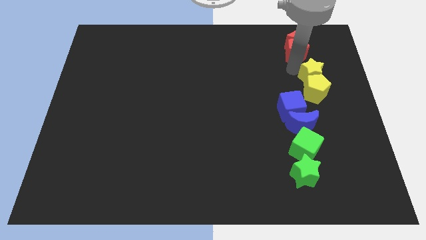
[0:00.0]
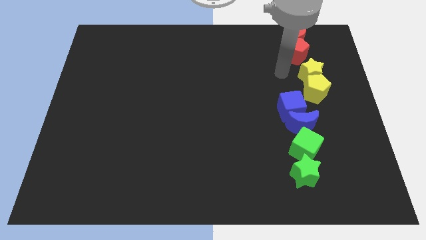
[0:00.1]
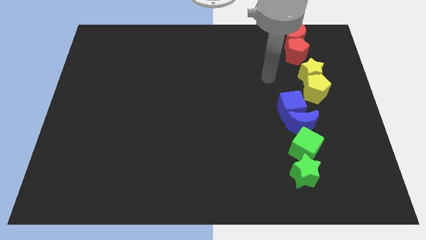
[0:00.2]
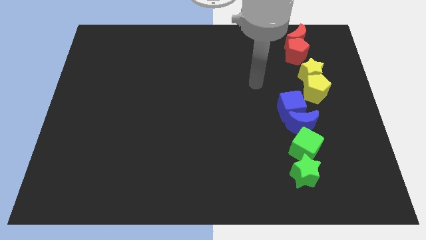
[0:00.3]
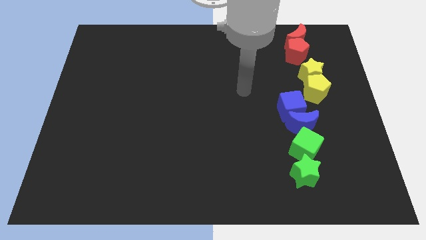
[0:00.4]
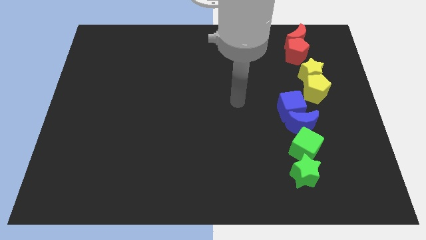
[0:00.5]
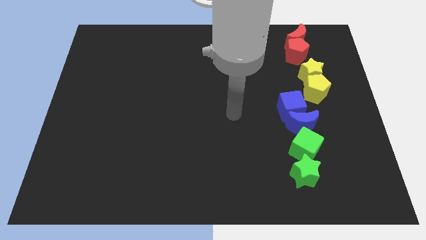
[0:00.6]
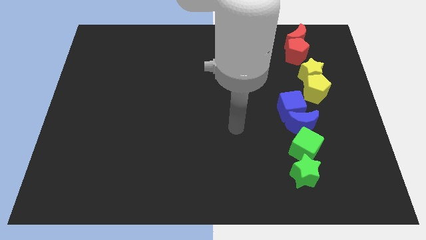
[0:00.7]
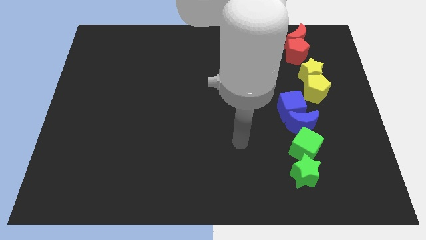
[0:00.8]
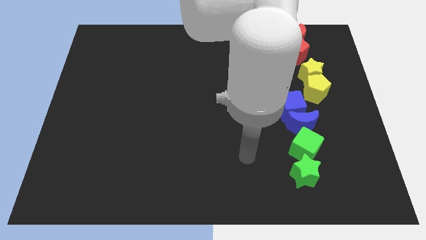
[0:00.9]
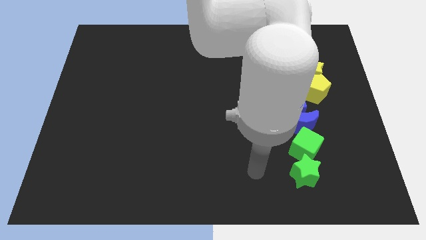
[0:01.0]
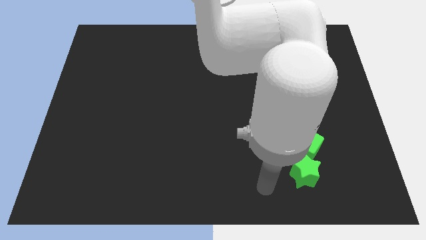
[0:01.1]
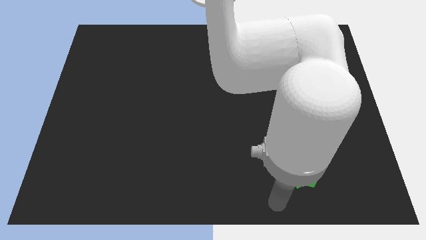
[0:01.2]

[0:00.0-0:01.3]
go away from the yellow star

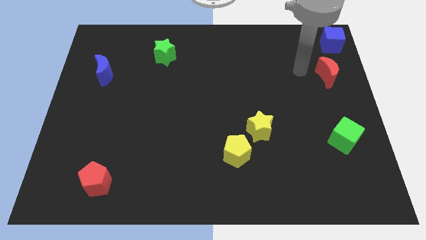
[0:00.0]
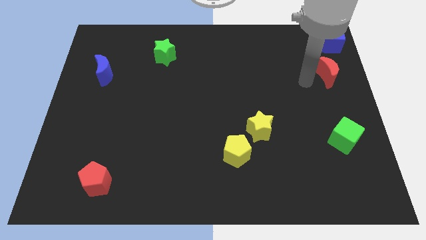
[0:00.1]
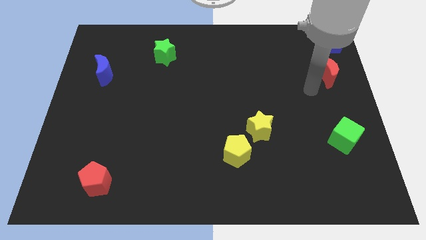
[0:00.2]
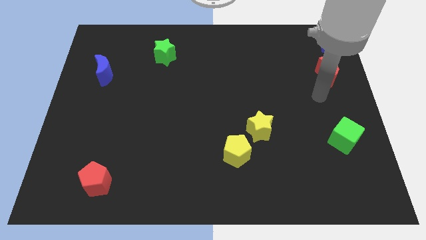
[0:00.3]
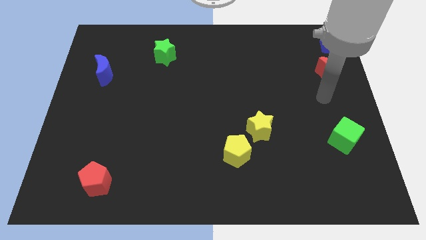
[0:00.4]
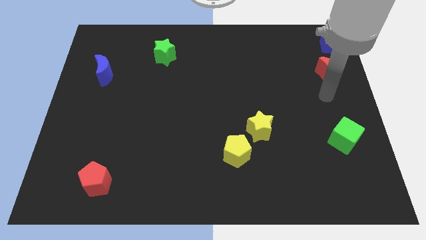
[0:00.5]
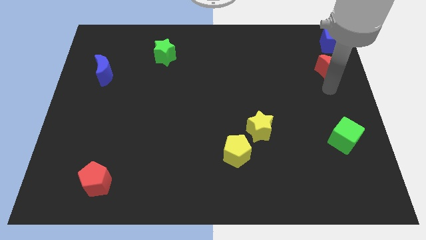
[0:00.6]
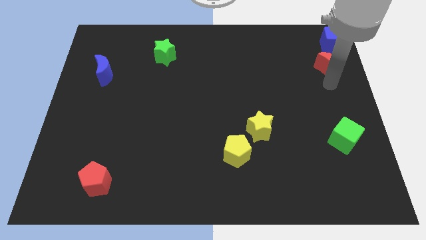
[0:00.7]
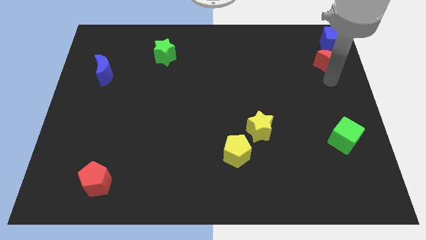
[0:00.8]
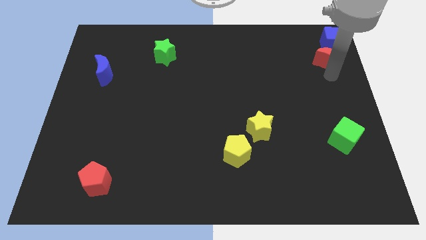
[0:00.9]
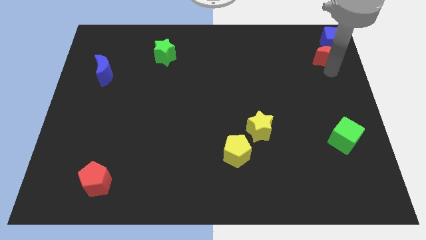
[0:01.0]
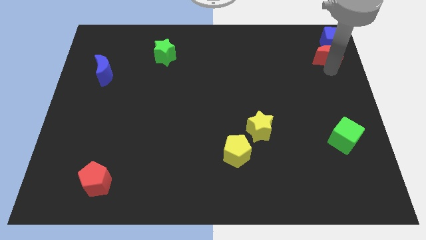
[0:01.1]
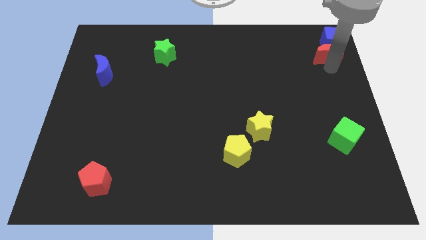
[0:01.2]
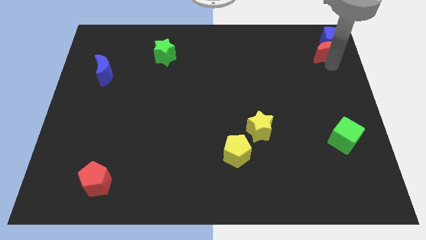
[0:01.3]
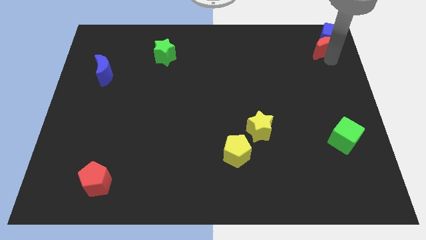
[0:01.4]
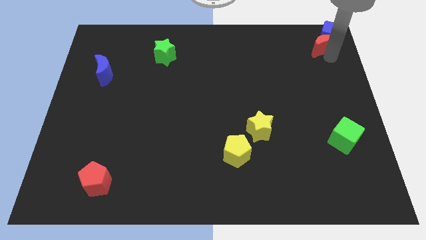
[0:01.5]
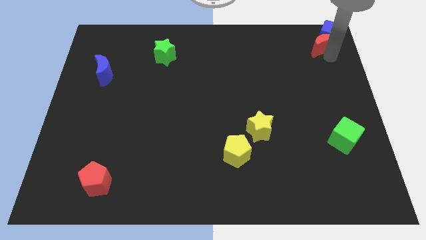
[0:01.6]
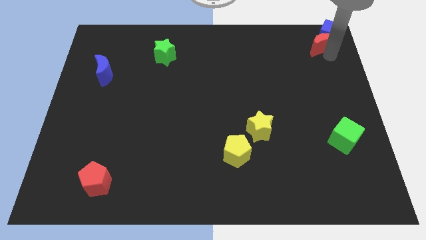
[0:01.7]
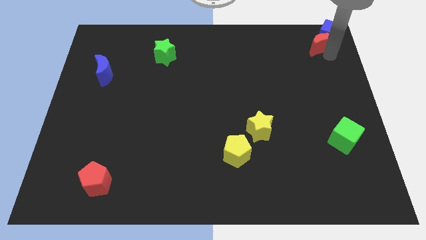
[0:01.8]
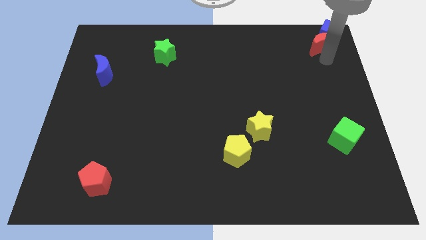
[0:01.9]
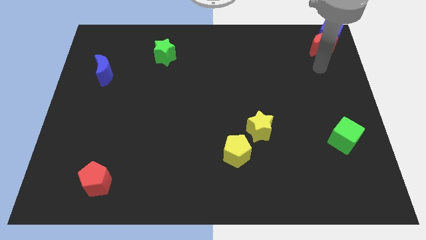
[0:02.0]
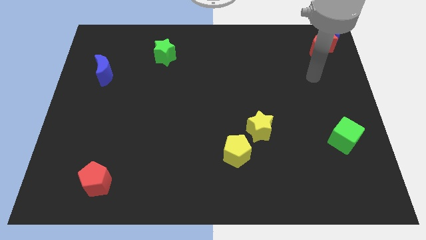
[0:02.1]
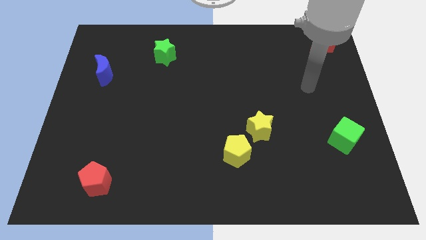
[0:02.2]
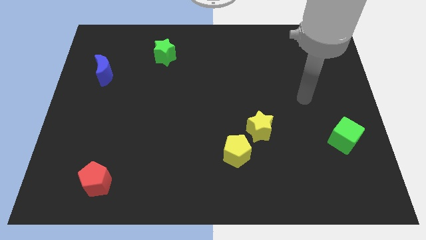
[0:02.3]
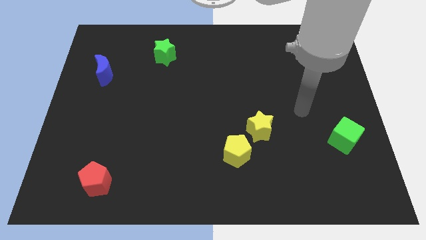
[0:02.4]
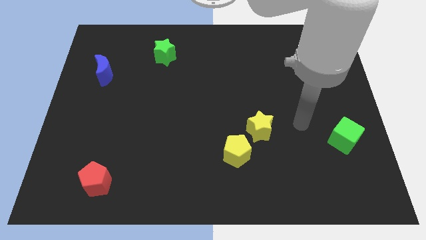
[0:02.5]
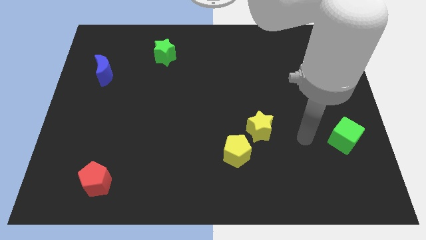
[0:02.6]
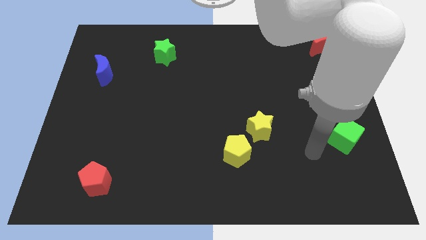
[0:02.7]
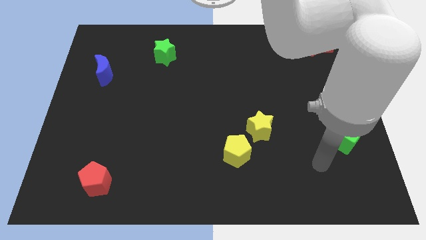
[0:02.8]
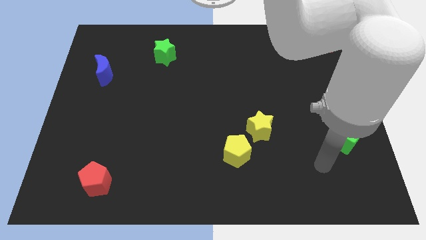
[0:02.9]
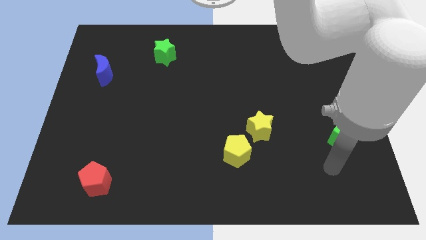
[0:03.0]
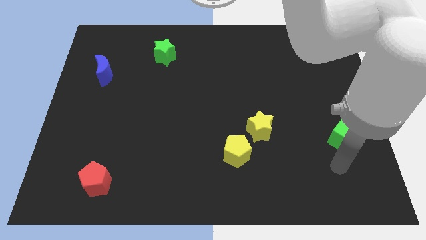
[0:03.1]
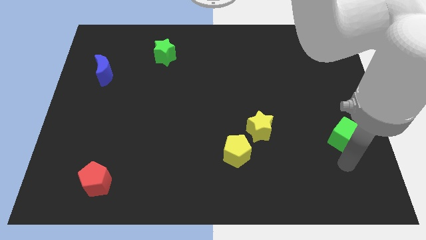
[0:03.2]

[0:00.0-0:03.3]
move the red moon close to the blue cube

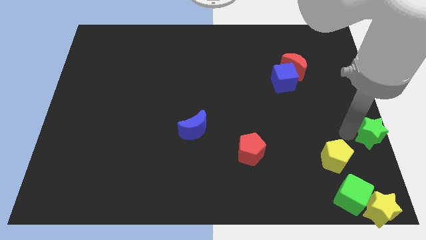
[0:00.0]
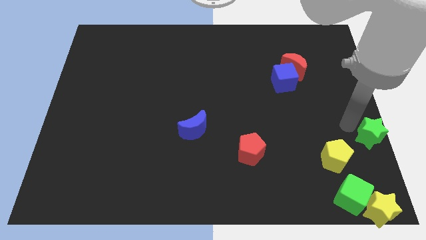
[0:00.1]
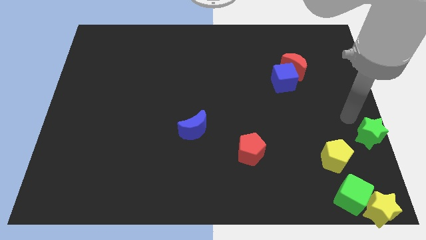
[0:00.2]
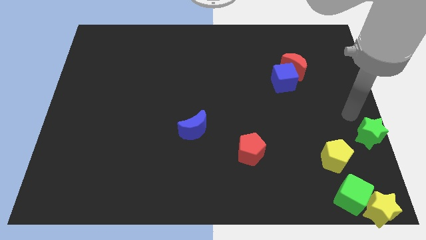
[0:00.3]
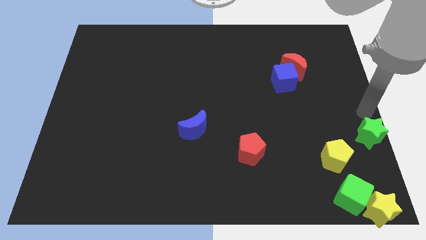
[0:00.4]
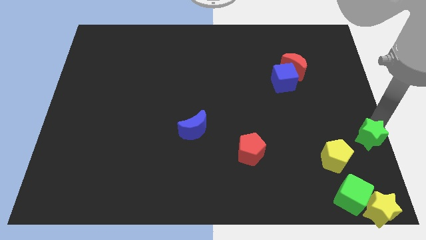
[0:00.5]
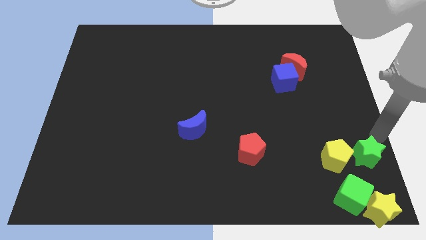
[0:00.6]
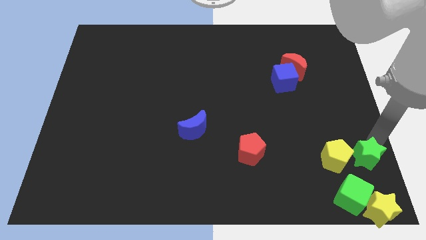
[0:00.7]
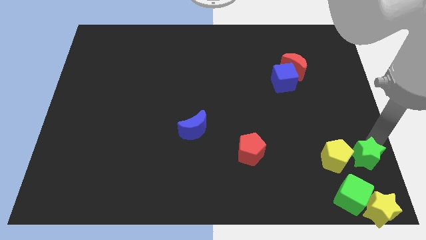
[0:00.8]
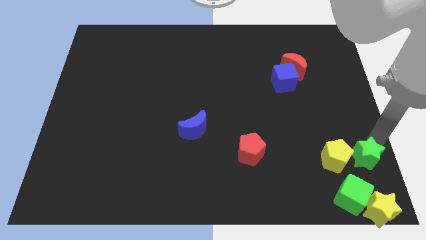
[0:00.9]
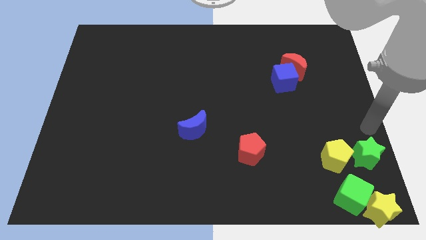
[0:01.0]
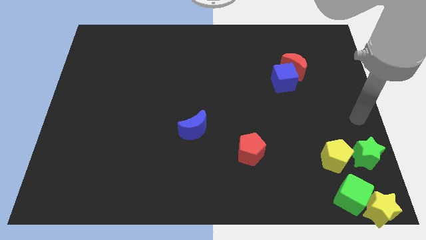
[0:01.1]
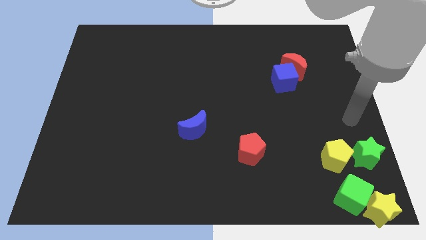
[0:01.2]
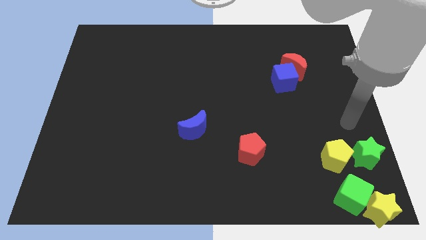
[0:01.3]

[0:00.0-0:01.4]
move the green star to the bottom right

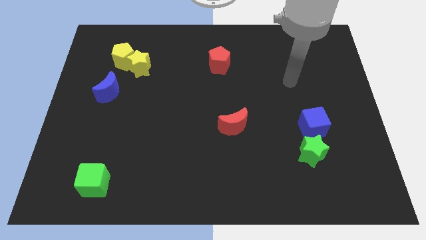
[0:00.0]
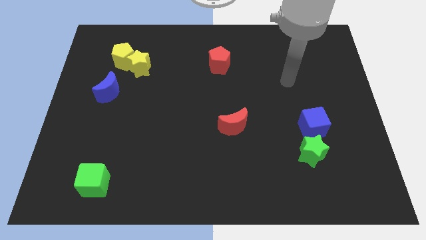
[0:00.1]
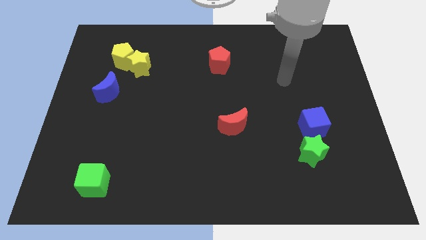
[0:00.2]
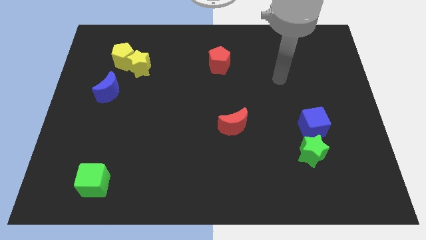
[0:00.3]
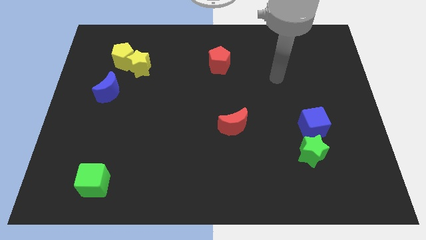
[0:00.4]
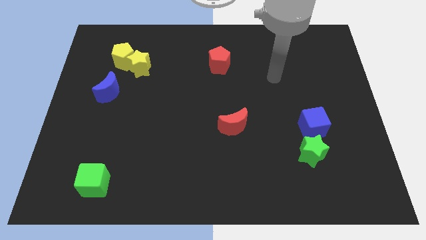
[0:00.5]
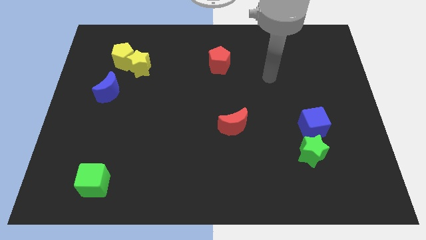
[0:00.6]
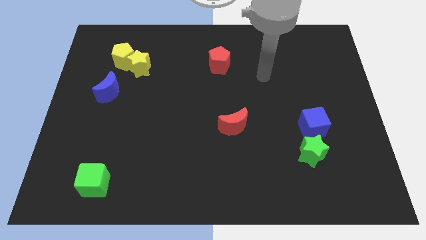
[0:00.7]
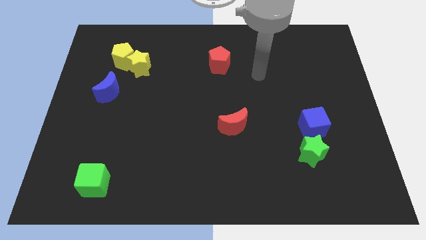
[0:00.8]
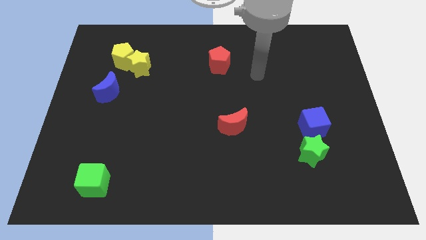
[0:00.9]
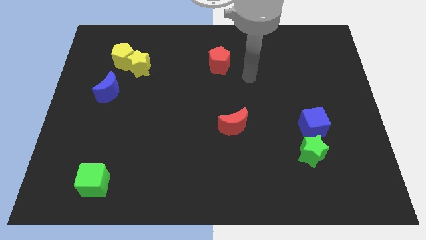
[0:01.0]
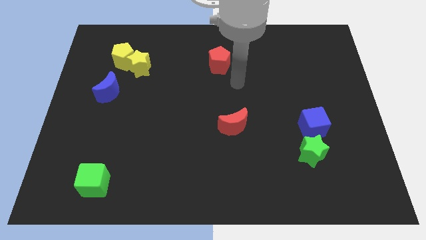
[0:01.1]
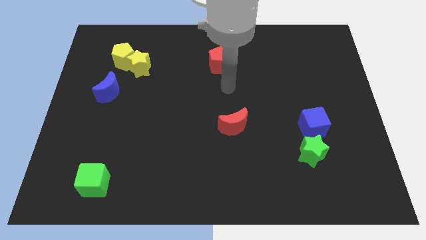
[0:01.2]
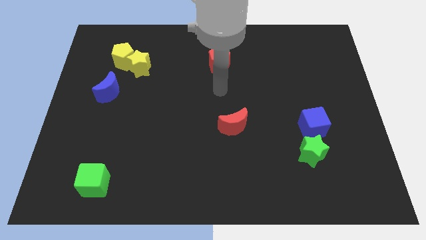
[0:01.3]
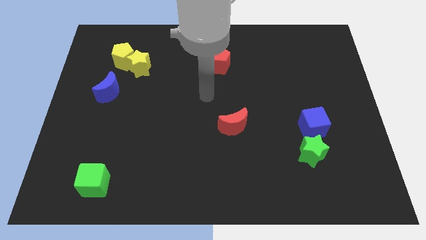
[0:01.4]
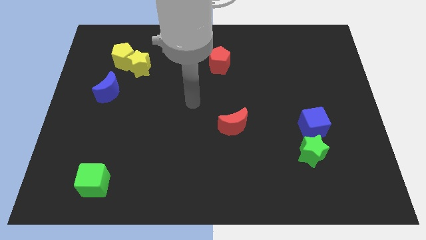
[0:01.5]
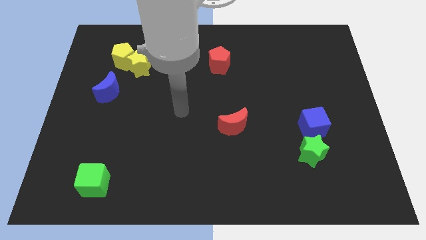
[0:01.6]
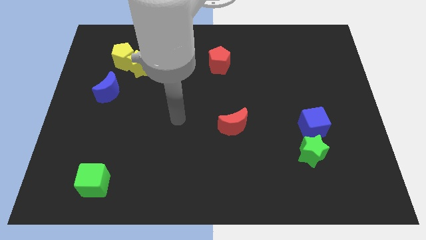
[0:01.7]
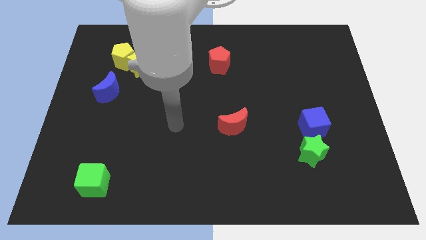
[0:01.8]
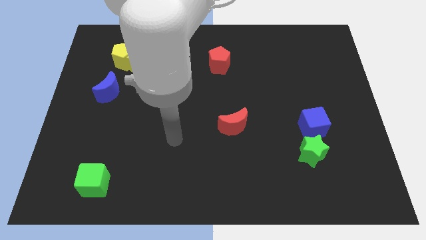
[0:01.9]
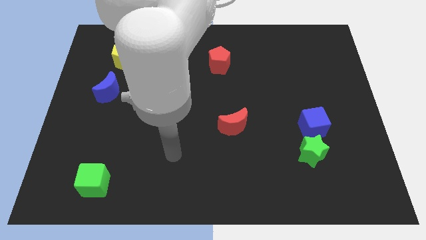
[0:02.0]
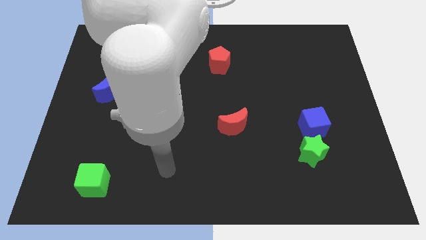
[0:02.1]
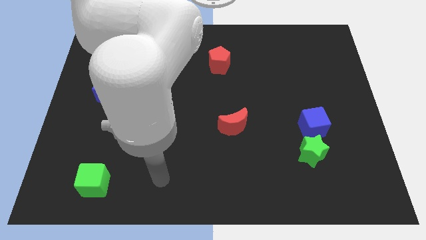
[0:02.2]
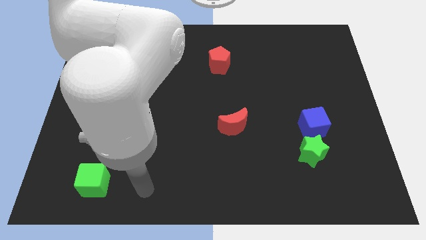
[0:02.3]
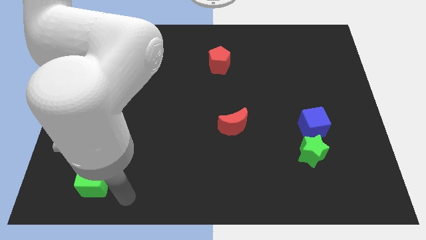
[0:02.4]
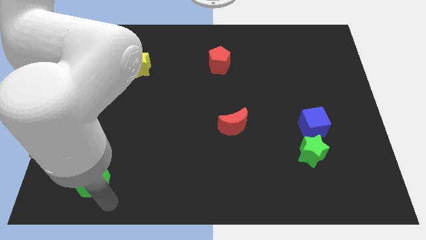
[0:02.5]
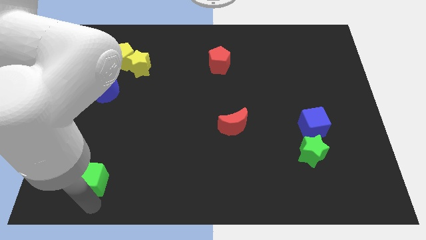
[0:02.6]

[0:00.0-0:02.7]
move your arm close to the green cube
